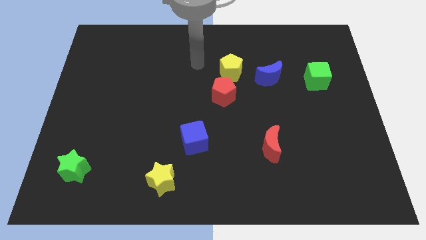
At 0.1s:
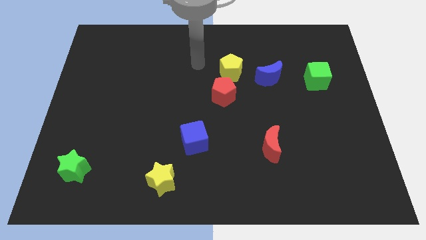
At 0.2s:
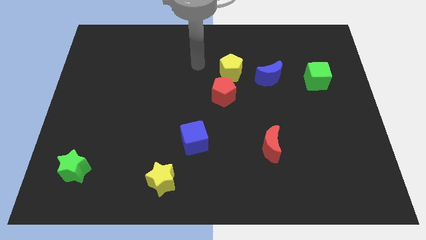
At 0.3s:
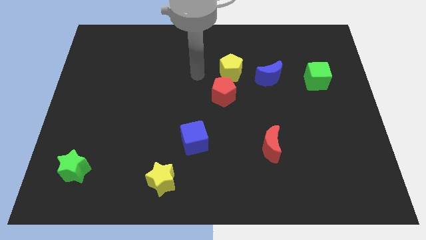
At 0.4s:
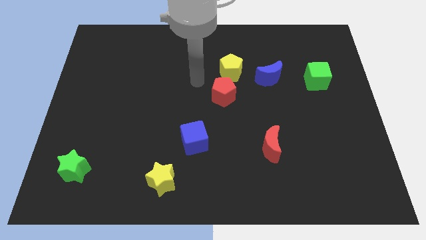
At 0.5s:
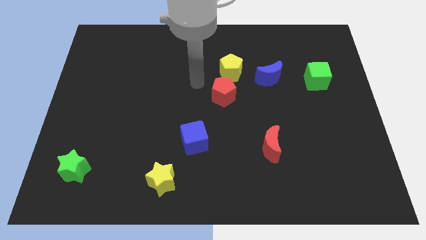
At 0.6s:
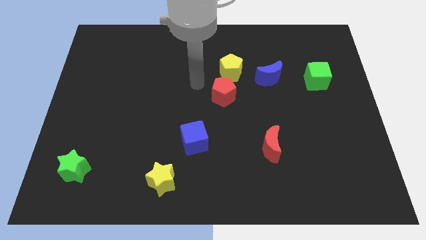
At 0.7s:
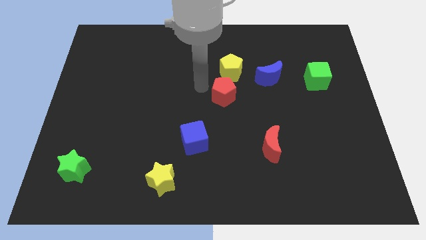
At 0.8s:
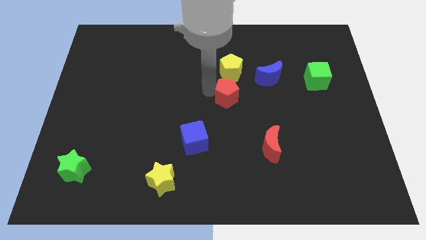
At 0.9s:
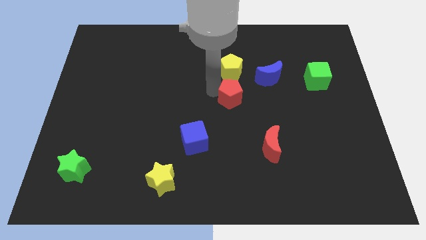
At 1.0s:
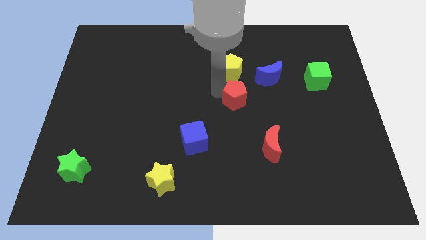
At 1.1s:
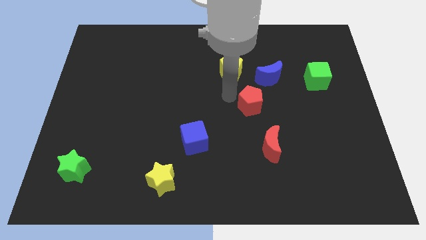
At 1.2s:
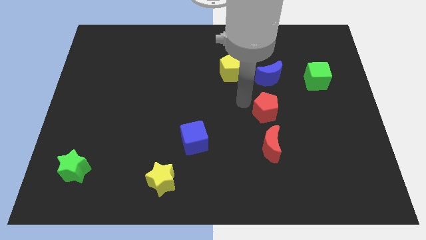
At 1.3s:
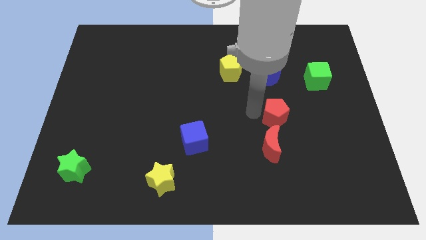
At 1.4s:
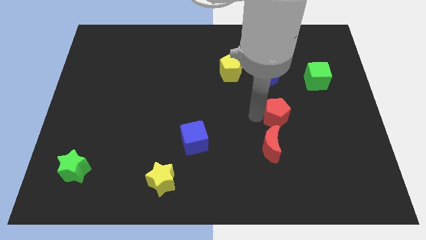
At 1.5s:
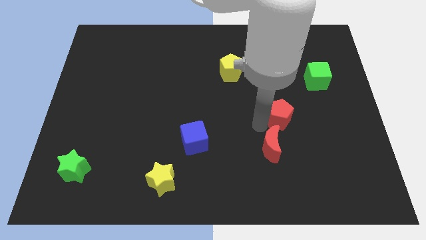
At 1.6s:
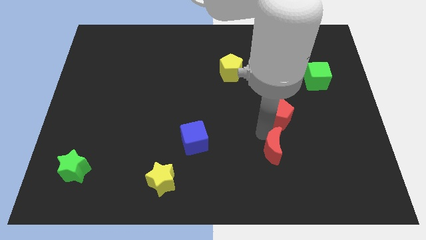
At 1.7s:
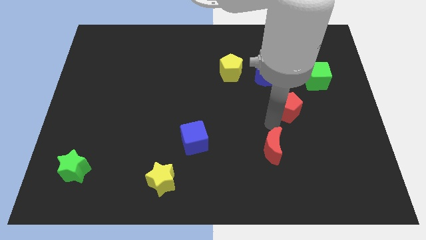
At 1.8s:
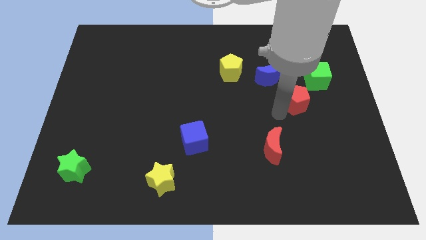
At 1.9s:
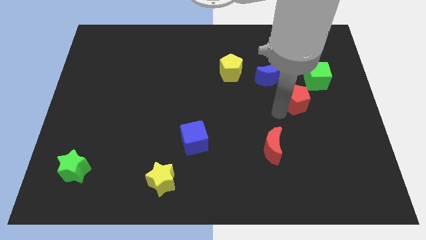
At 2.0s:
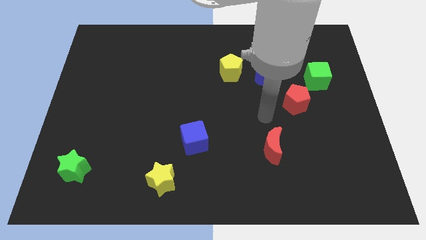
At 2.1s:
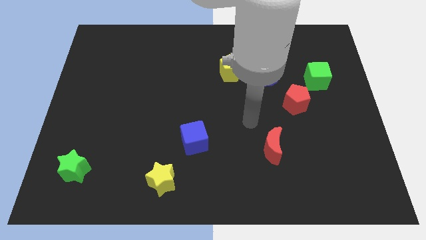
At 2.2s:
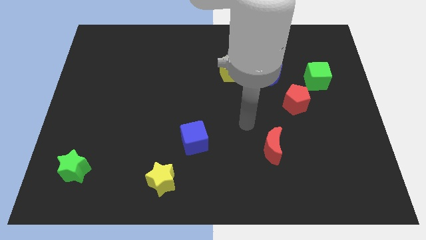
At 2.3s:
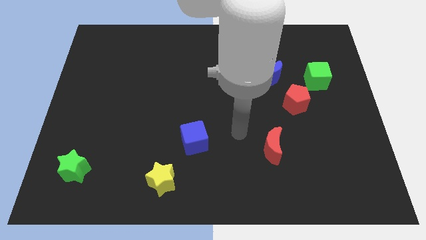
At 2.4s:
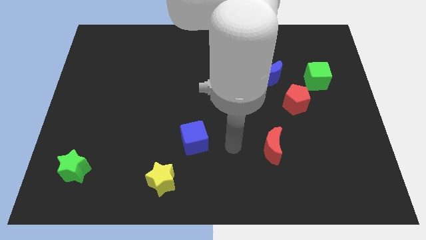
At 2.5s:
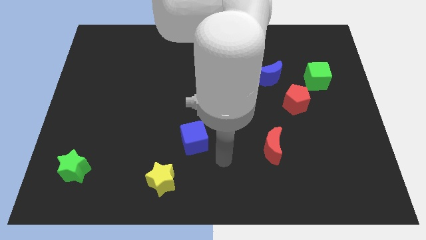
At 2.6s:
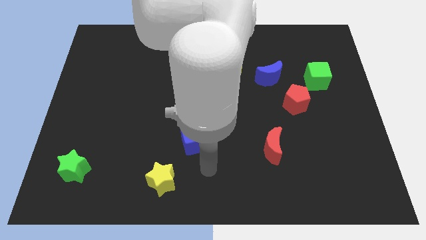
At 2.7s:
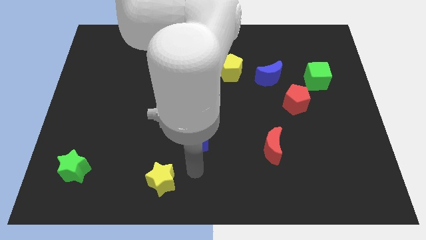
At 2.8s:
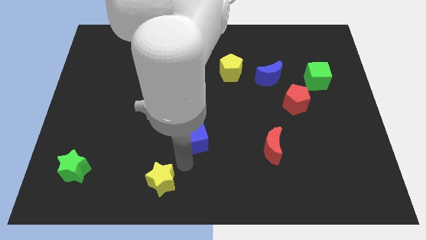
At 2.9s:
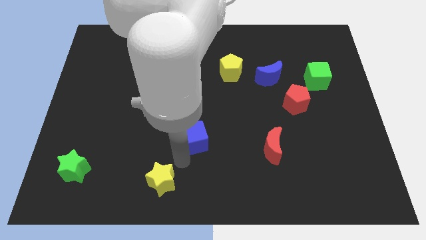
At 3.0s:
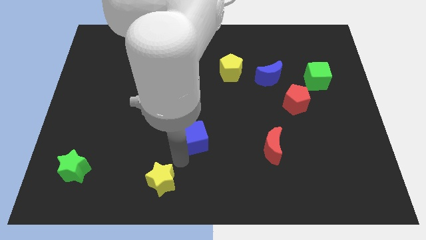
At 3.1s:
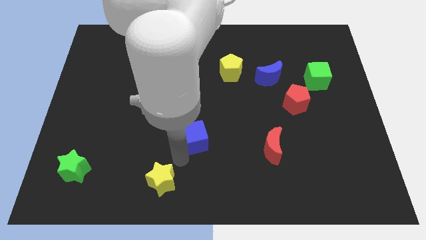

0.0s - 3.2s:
push the red pentagon below the green cube

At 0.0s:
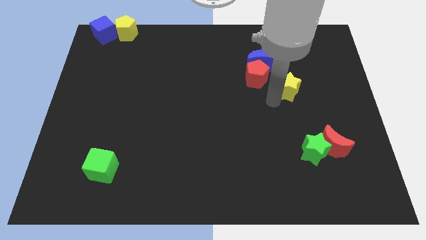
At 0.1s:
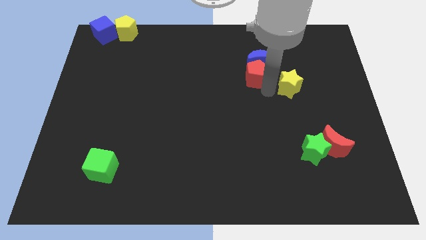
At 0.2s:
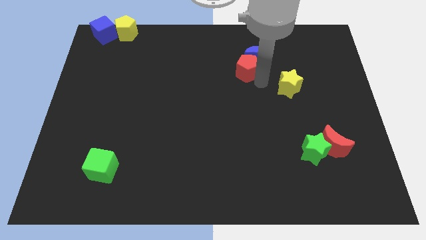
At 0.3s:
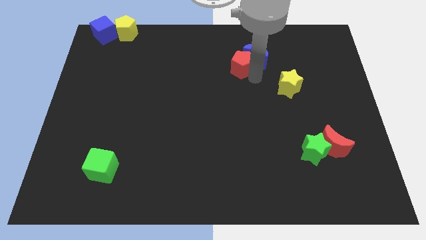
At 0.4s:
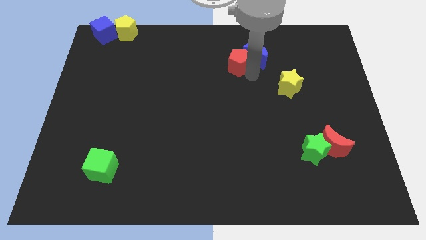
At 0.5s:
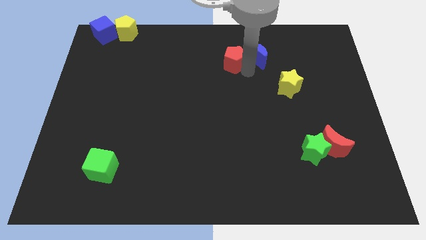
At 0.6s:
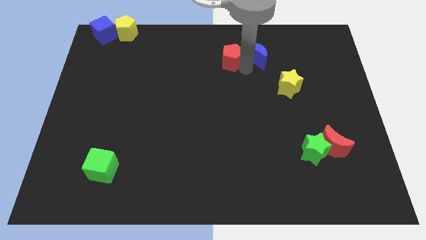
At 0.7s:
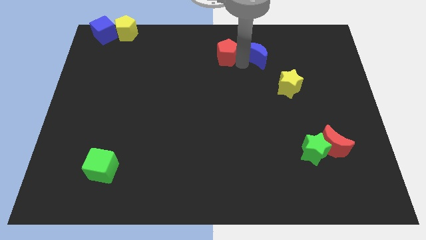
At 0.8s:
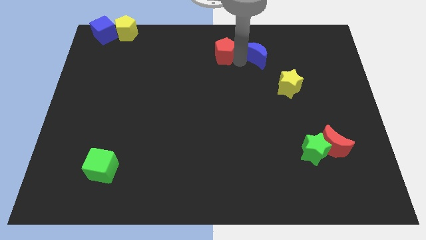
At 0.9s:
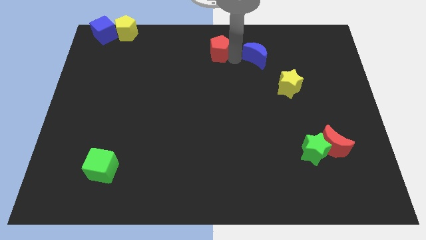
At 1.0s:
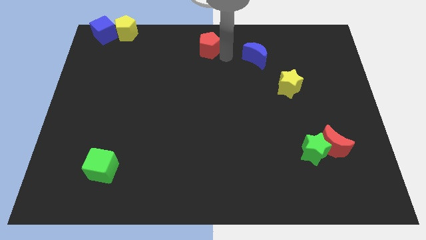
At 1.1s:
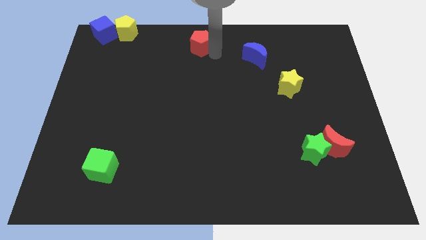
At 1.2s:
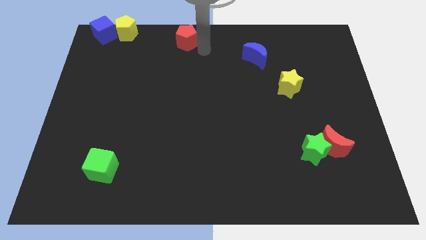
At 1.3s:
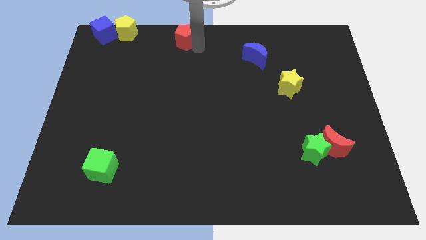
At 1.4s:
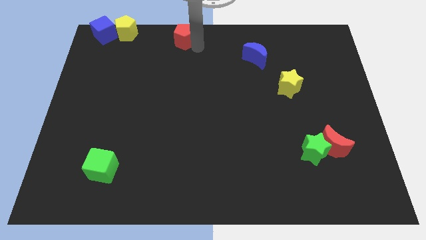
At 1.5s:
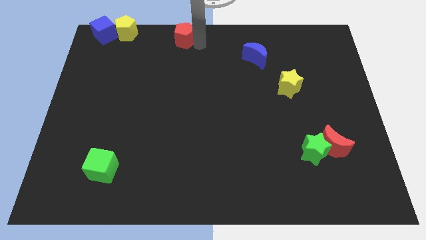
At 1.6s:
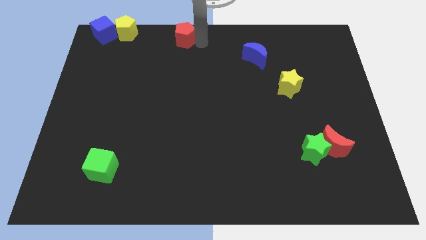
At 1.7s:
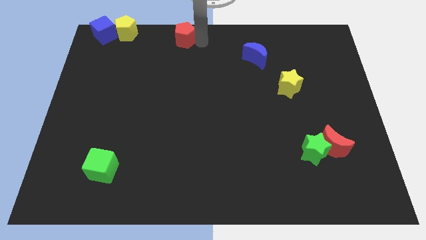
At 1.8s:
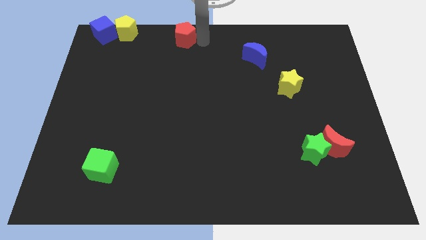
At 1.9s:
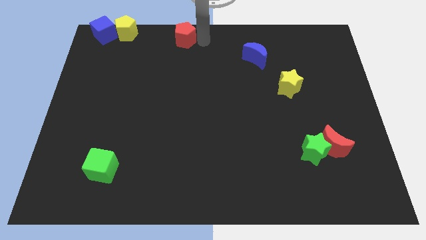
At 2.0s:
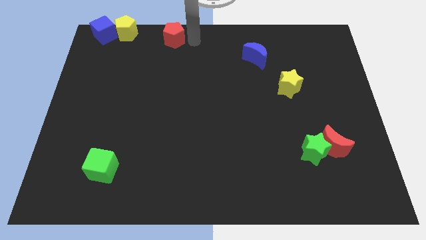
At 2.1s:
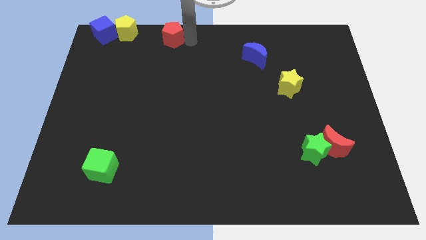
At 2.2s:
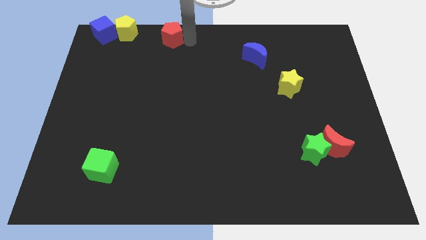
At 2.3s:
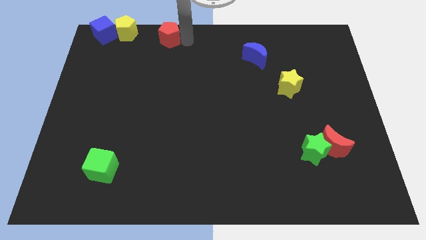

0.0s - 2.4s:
place the red pentagon horizontally to the right side of the yellow pentagon

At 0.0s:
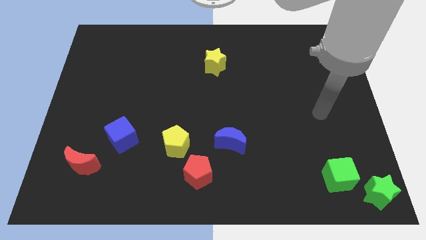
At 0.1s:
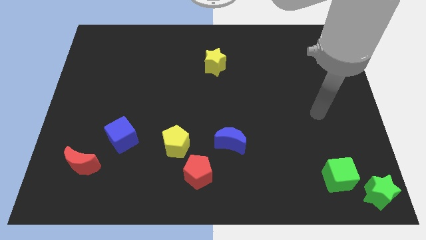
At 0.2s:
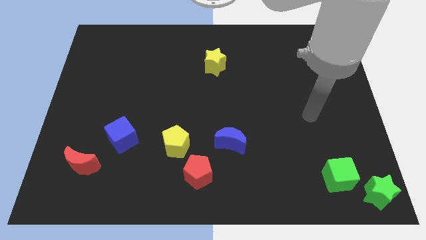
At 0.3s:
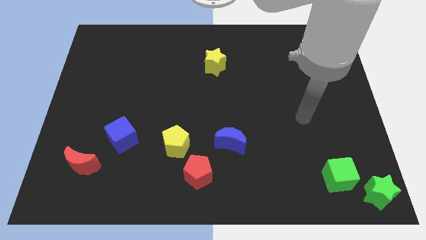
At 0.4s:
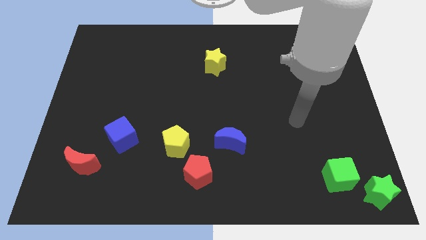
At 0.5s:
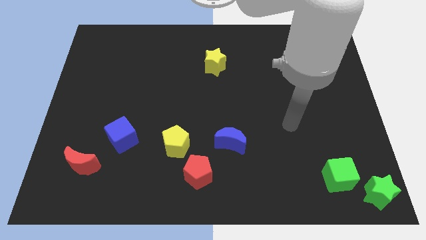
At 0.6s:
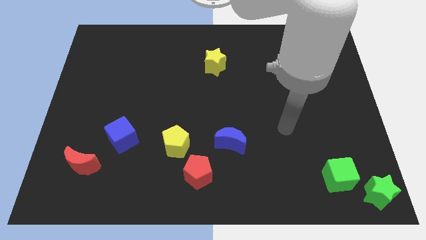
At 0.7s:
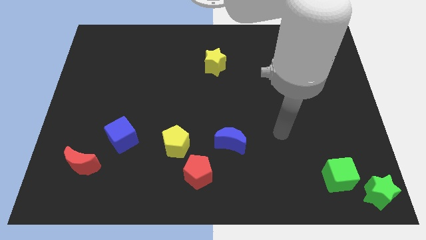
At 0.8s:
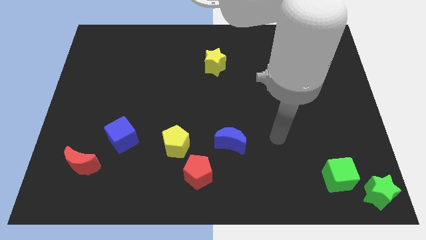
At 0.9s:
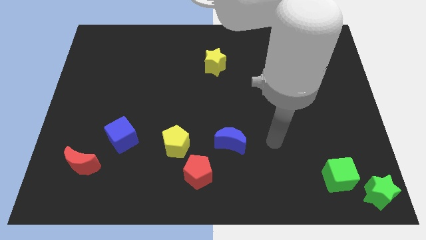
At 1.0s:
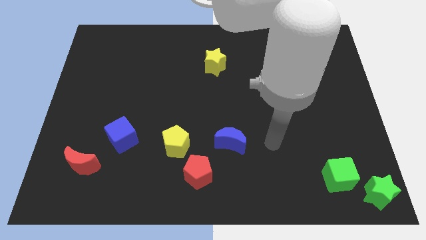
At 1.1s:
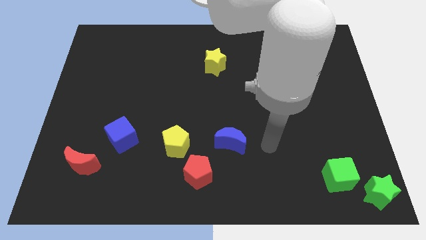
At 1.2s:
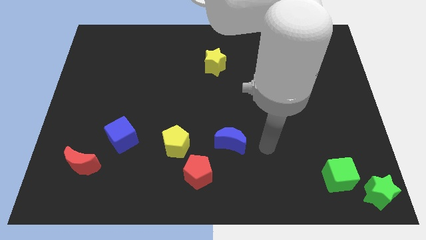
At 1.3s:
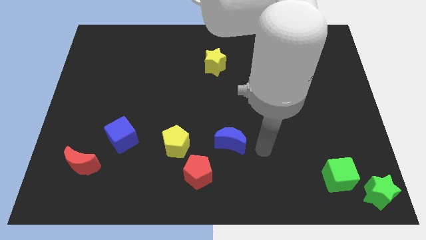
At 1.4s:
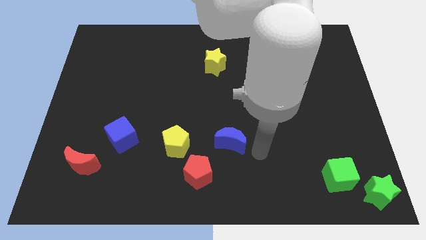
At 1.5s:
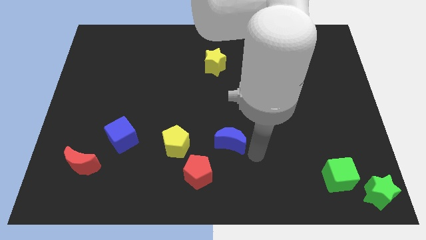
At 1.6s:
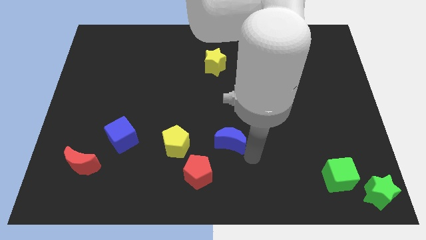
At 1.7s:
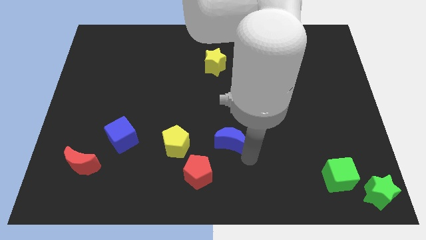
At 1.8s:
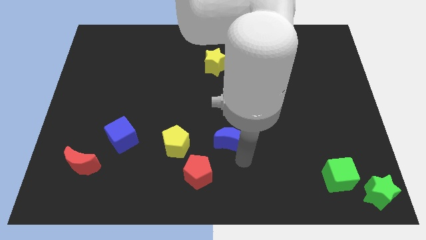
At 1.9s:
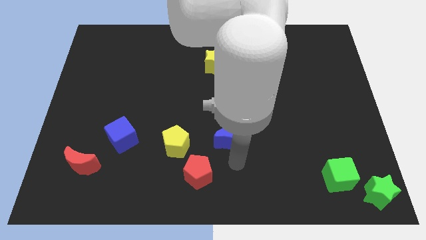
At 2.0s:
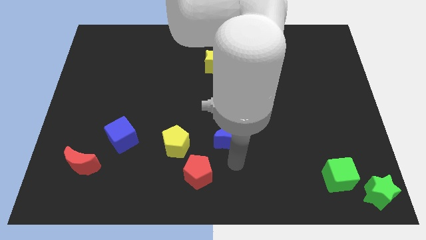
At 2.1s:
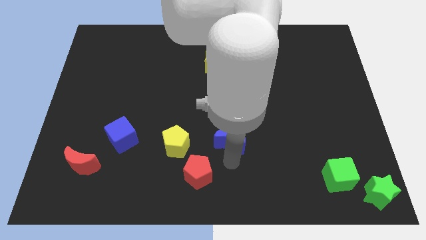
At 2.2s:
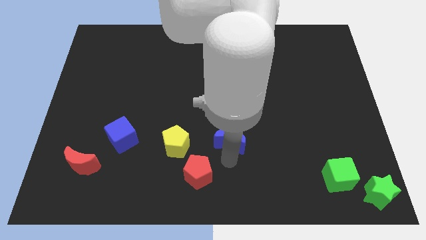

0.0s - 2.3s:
move your arm to the bottom of the blue crescent

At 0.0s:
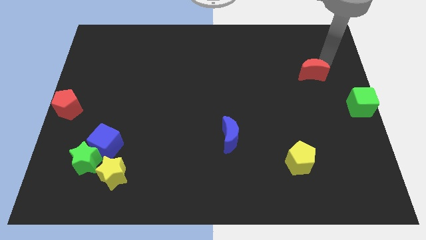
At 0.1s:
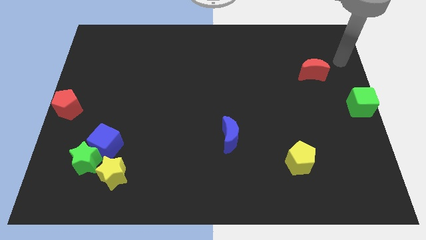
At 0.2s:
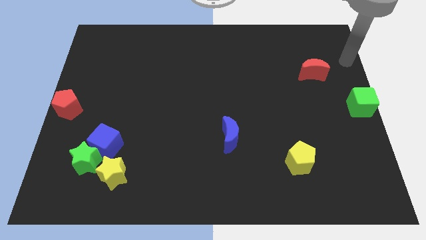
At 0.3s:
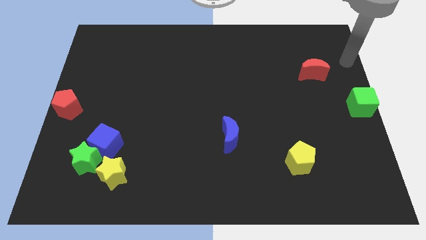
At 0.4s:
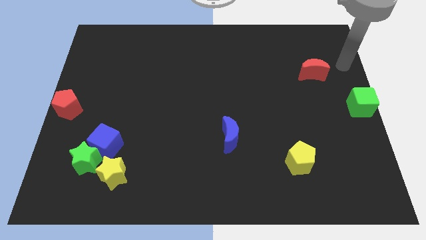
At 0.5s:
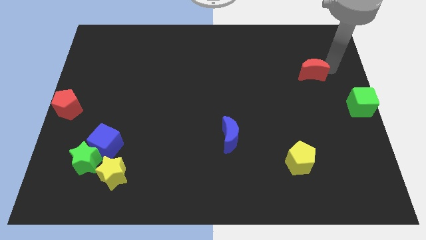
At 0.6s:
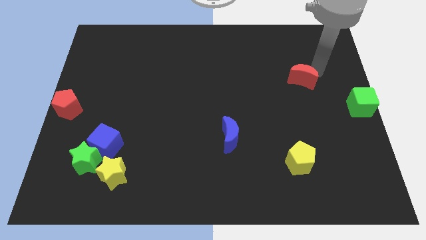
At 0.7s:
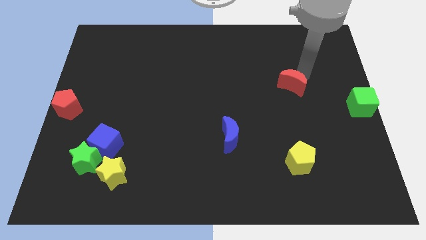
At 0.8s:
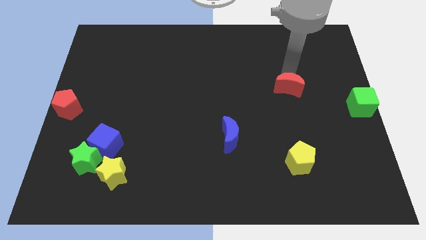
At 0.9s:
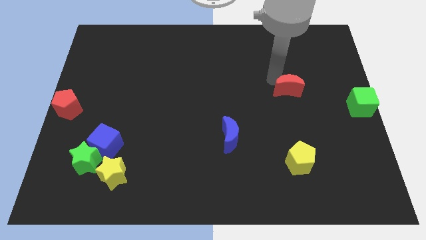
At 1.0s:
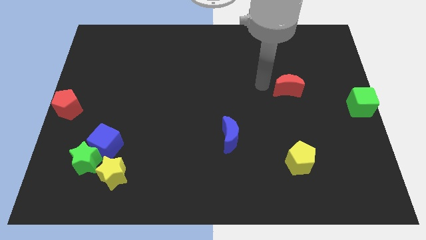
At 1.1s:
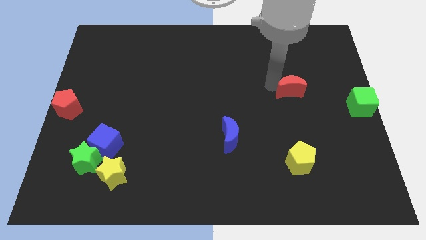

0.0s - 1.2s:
move the red crescent to the bottom of the board
